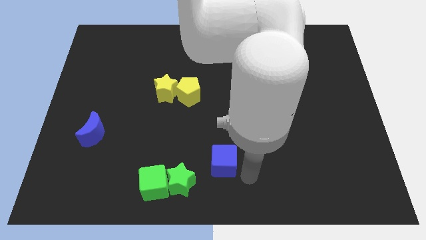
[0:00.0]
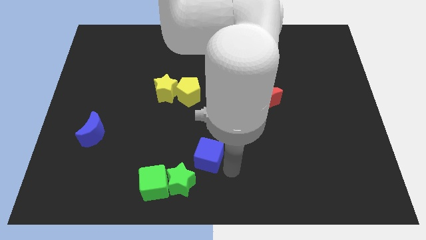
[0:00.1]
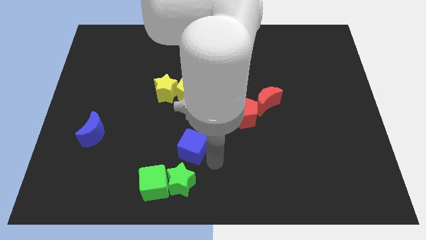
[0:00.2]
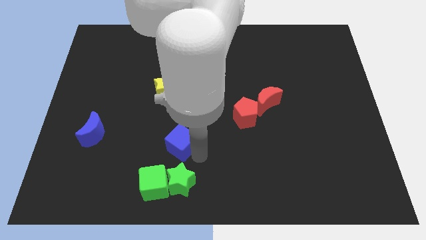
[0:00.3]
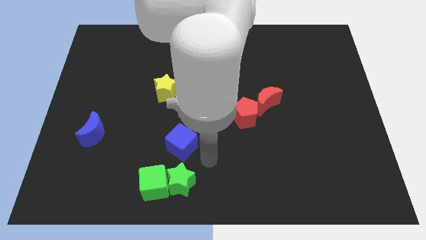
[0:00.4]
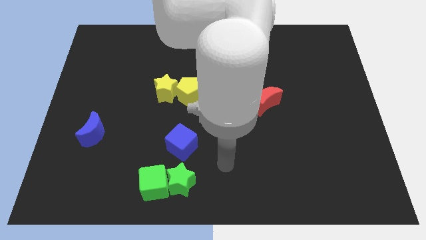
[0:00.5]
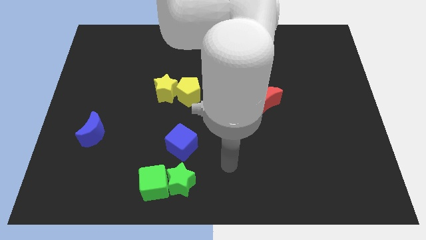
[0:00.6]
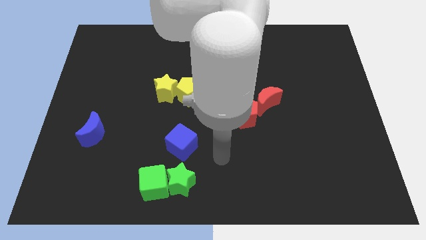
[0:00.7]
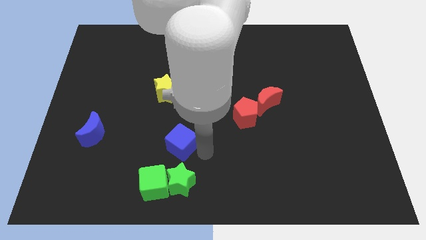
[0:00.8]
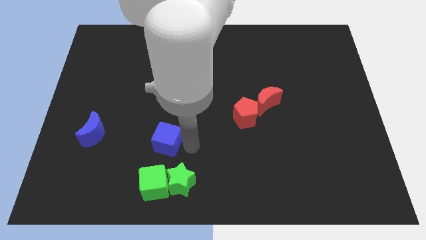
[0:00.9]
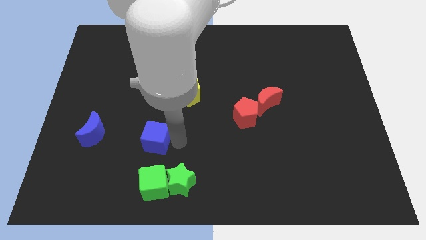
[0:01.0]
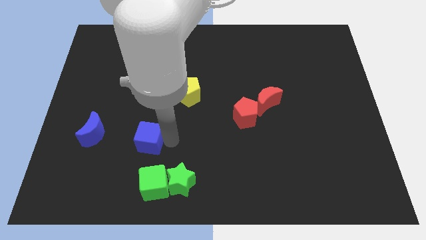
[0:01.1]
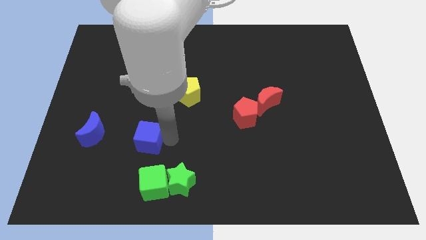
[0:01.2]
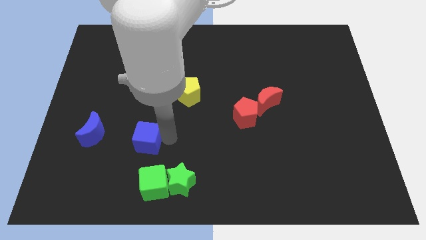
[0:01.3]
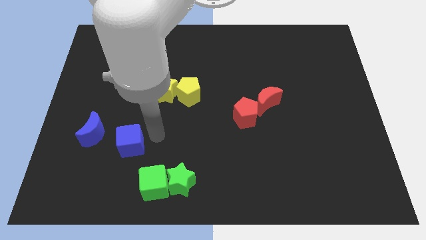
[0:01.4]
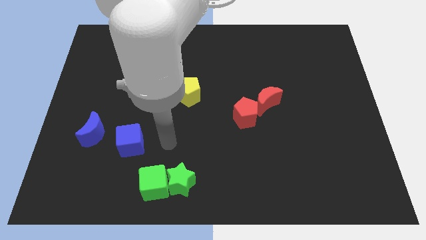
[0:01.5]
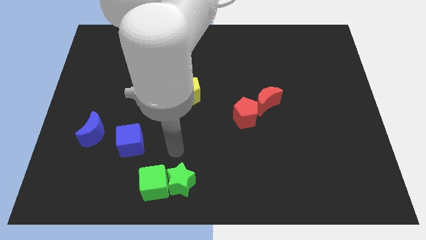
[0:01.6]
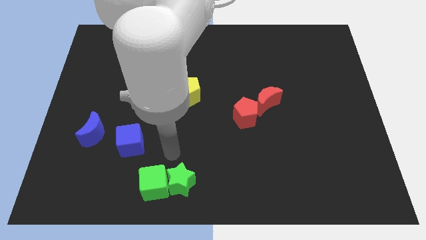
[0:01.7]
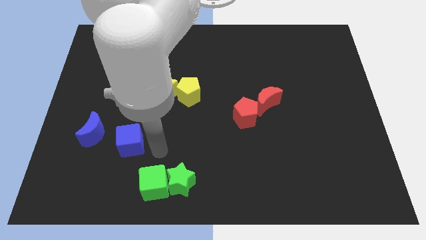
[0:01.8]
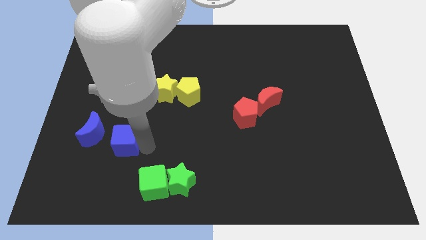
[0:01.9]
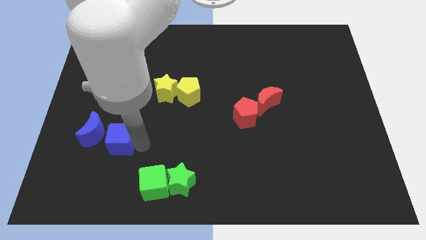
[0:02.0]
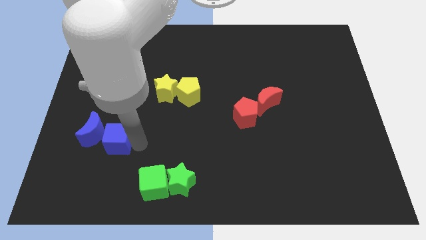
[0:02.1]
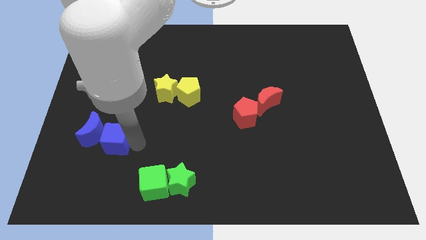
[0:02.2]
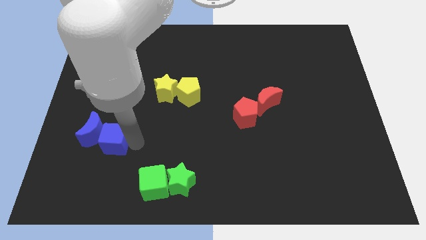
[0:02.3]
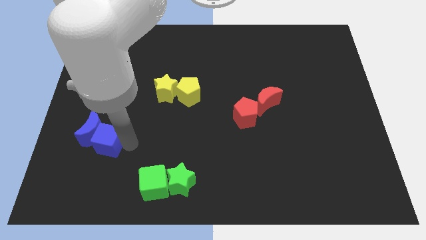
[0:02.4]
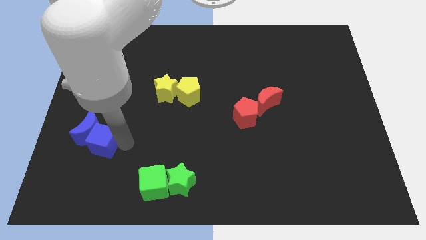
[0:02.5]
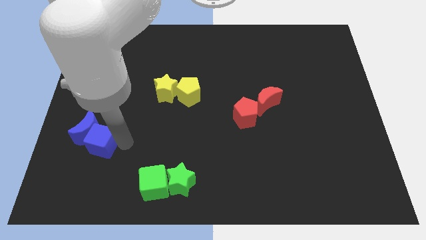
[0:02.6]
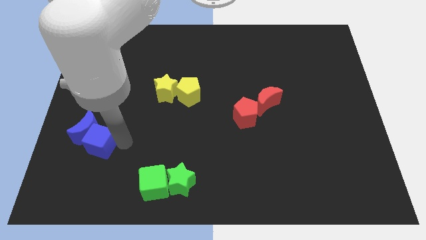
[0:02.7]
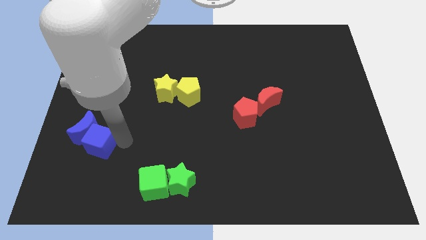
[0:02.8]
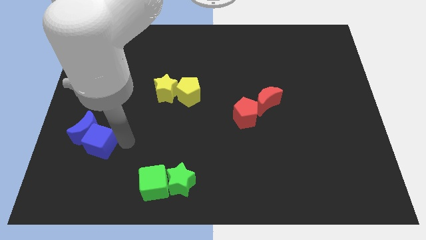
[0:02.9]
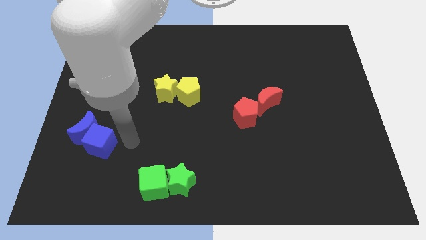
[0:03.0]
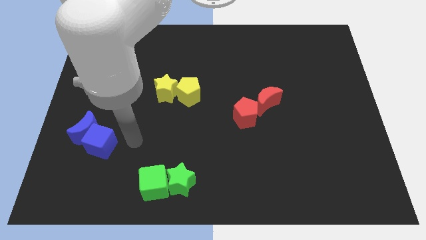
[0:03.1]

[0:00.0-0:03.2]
slide the blue cube into the blue moon

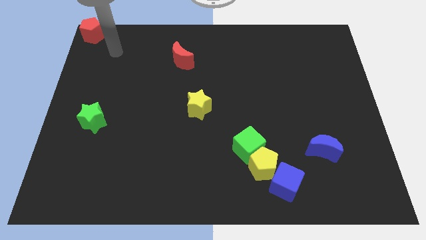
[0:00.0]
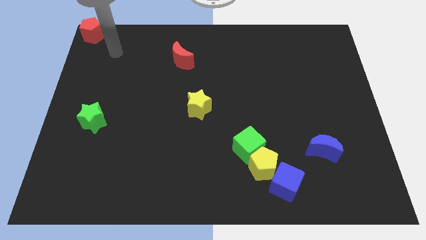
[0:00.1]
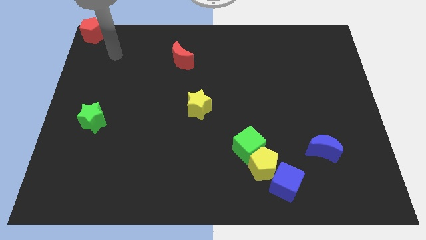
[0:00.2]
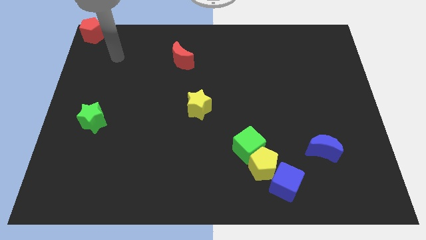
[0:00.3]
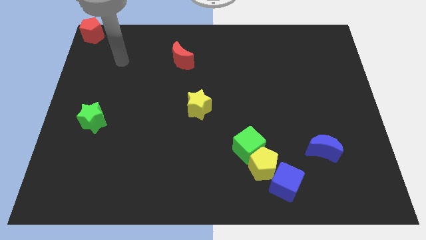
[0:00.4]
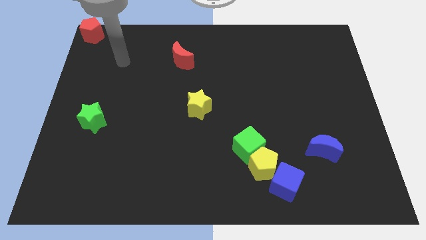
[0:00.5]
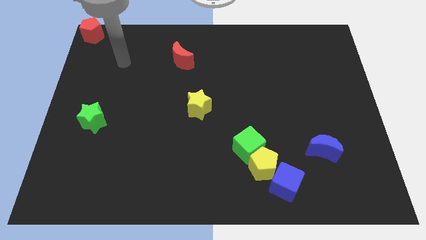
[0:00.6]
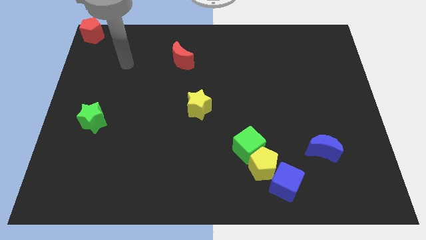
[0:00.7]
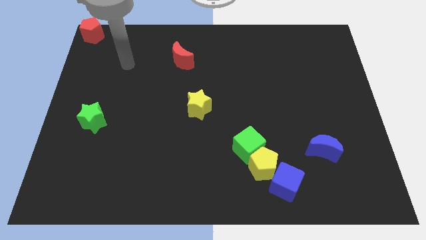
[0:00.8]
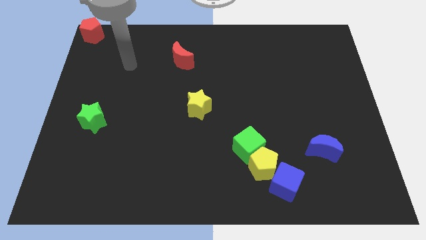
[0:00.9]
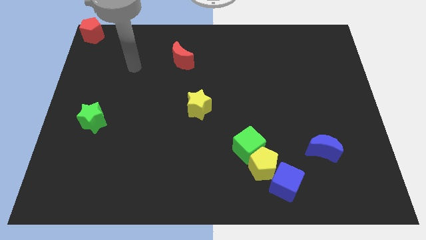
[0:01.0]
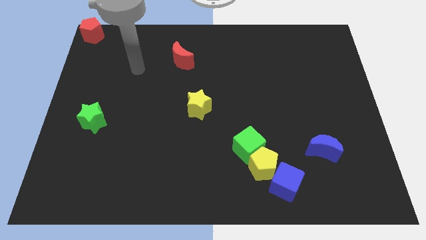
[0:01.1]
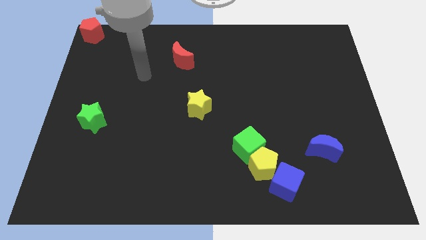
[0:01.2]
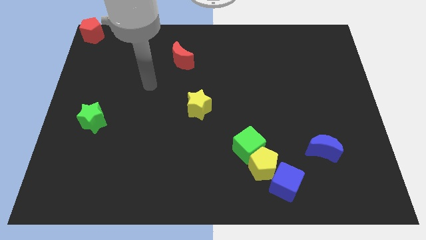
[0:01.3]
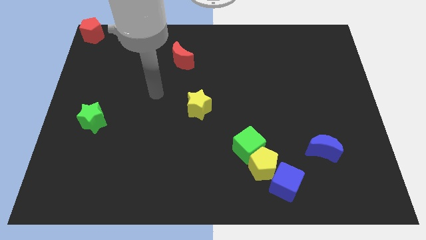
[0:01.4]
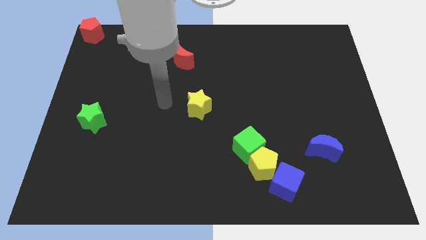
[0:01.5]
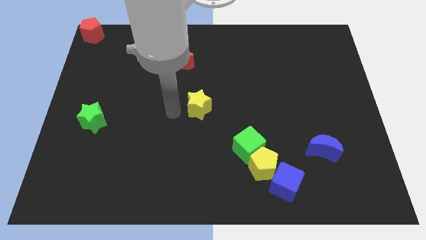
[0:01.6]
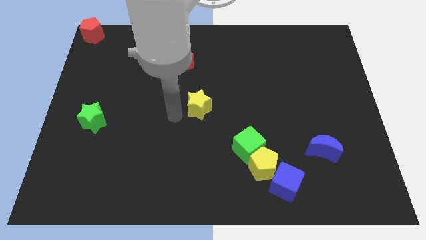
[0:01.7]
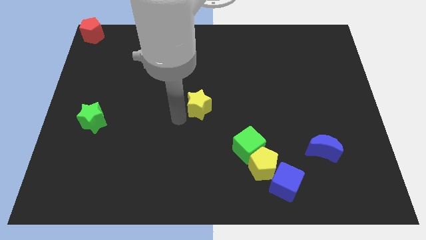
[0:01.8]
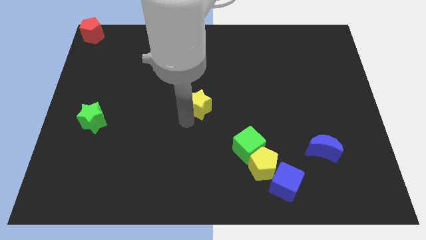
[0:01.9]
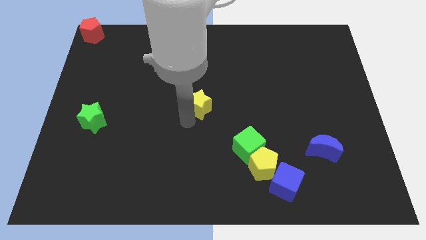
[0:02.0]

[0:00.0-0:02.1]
move your arm to the bottom of the yellow star

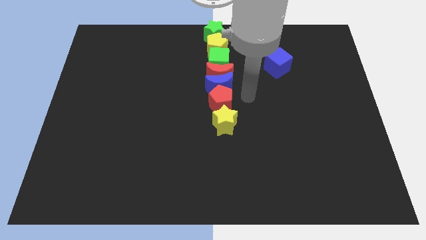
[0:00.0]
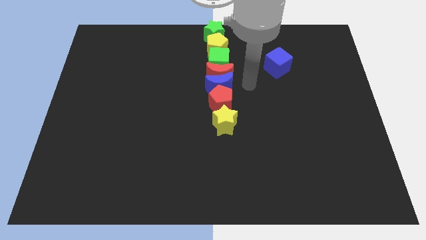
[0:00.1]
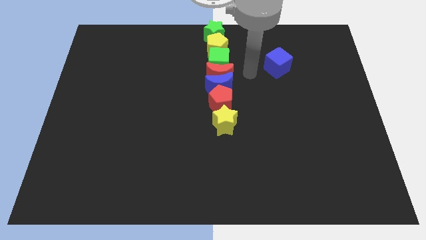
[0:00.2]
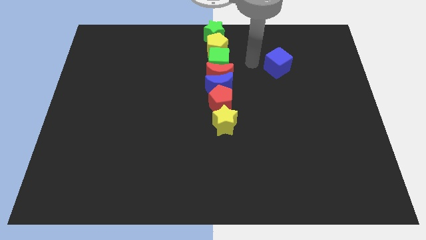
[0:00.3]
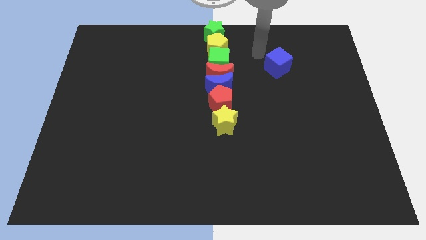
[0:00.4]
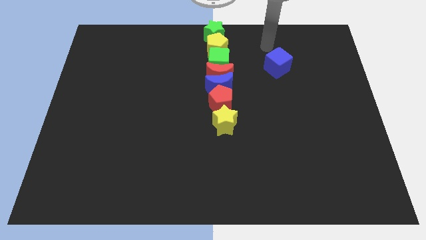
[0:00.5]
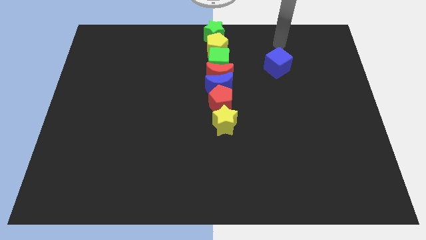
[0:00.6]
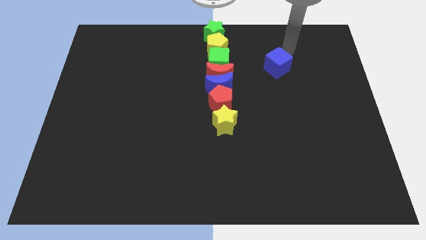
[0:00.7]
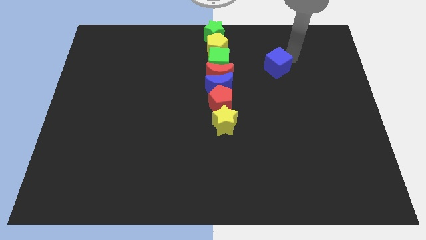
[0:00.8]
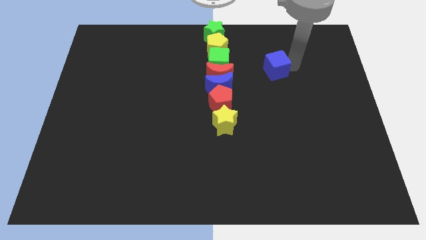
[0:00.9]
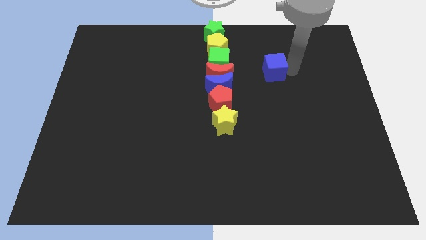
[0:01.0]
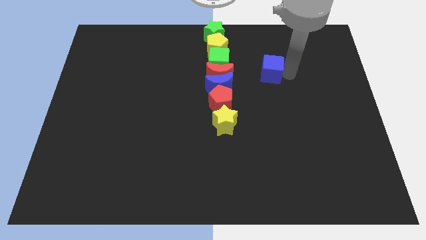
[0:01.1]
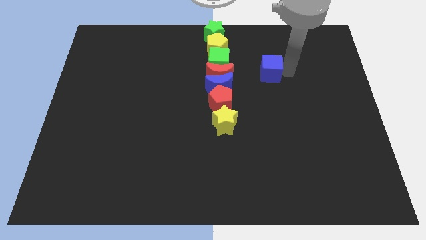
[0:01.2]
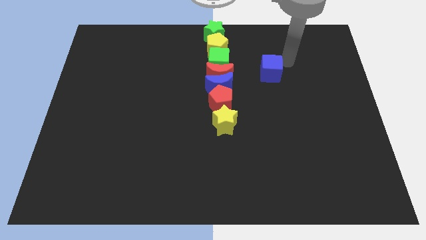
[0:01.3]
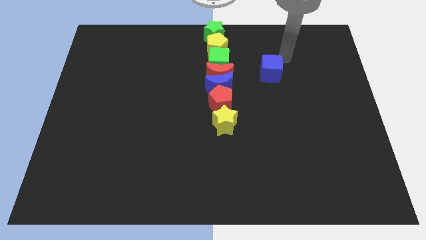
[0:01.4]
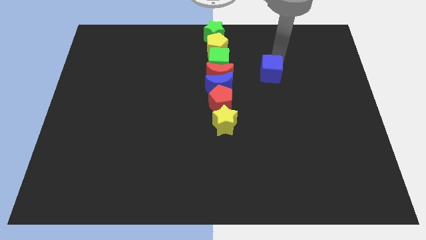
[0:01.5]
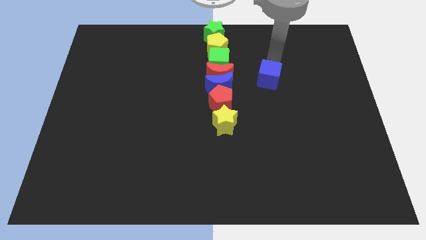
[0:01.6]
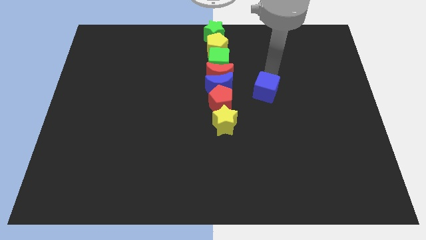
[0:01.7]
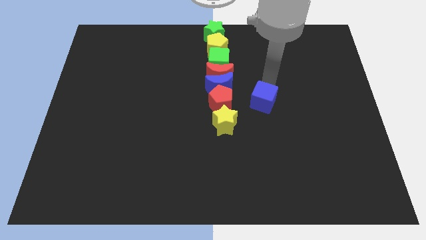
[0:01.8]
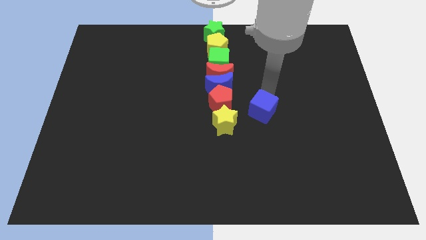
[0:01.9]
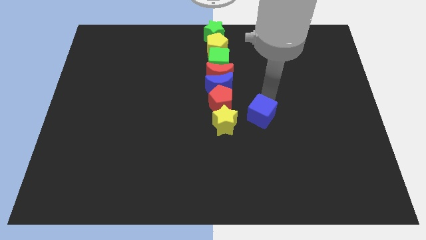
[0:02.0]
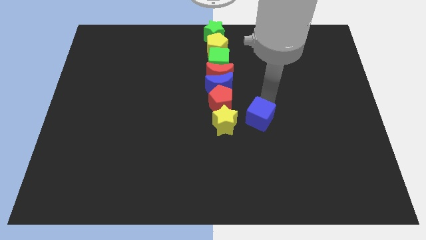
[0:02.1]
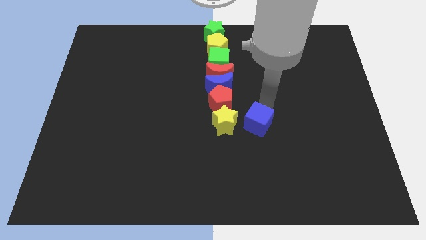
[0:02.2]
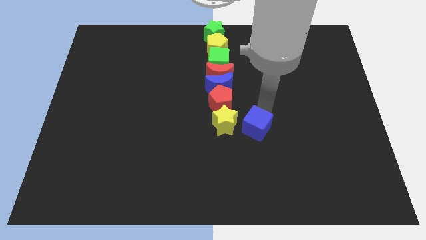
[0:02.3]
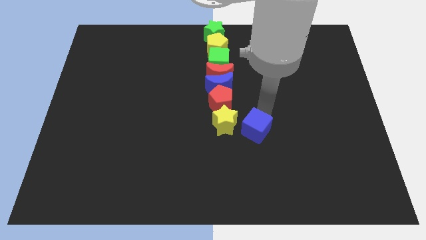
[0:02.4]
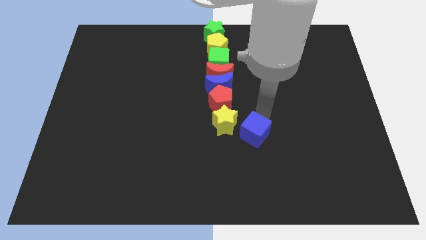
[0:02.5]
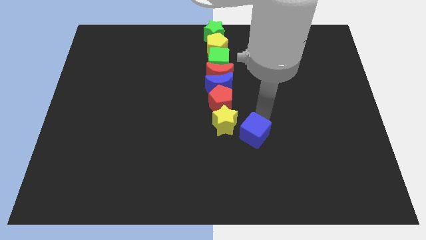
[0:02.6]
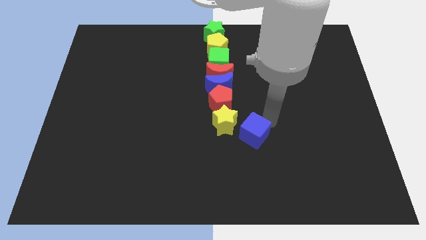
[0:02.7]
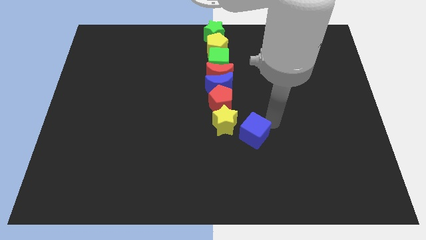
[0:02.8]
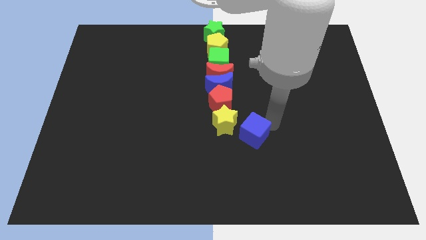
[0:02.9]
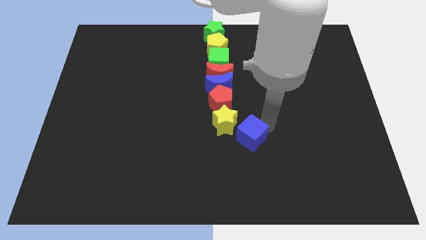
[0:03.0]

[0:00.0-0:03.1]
move the blue cube to the below right of the yellow star

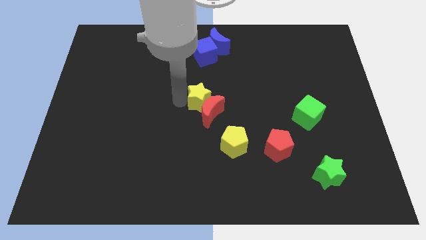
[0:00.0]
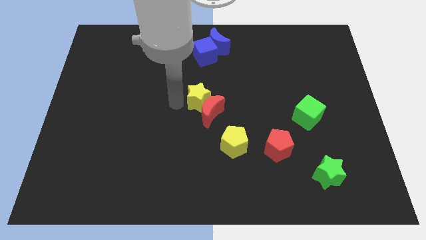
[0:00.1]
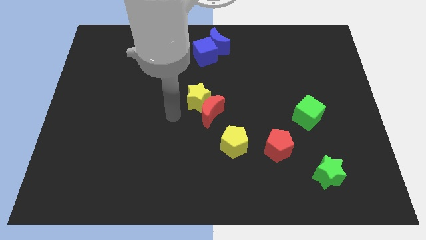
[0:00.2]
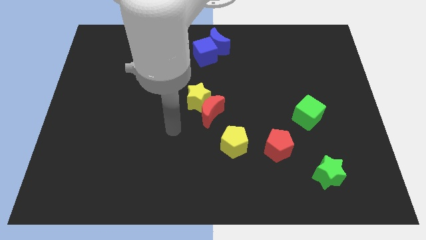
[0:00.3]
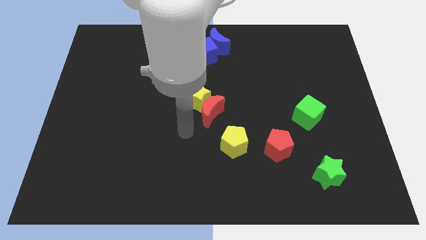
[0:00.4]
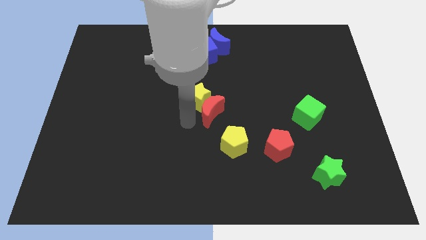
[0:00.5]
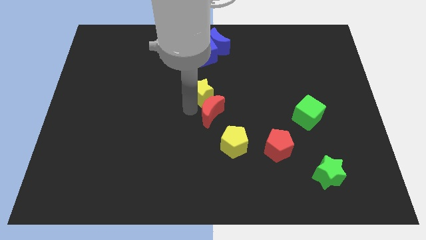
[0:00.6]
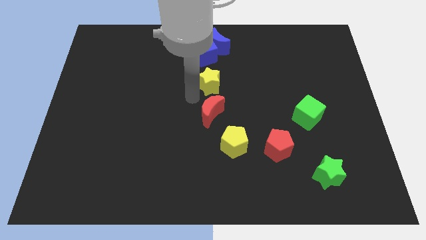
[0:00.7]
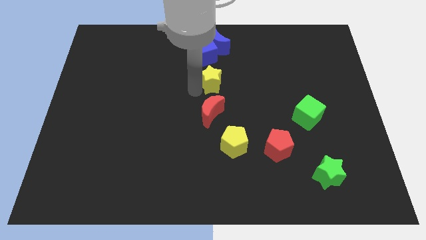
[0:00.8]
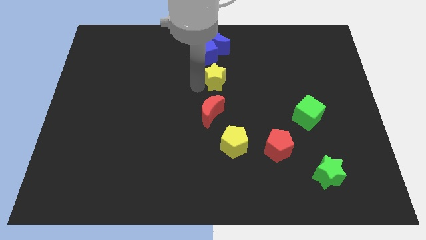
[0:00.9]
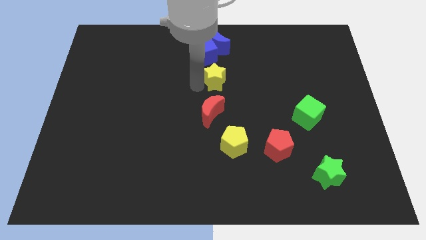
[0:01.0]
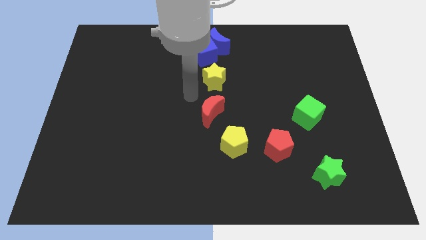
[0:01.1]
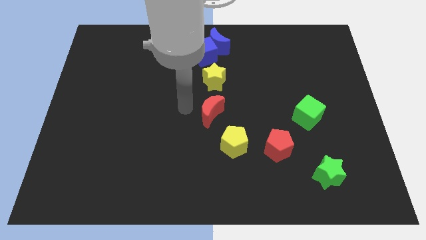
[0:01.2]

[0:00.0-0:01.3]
push yellow star below to the blue cube
